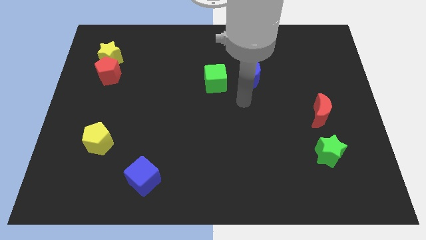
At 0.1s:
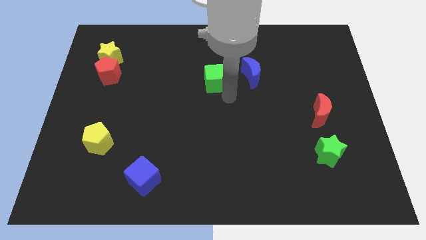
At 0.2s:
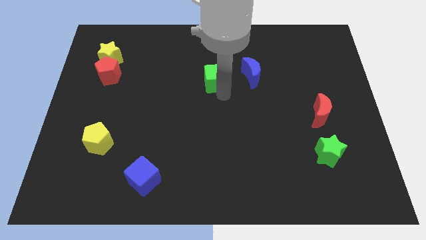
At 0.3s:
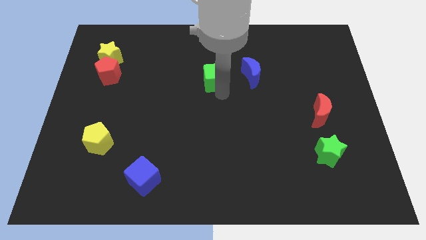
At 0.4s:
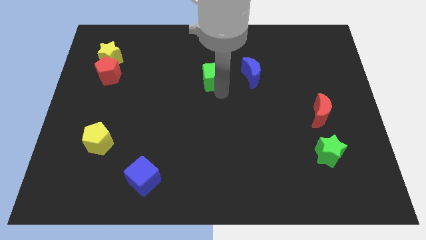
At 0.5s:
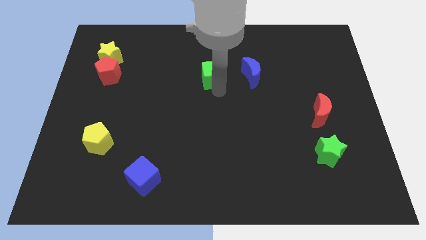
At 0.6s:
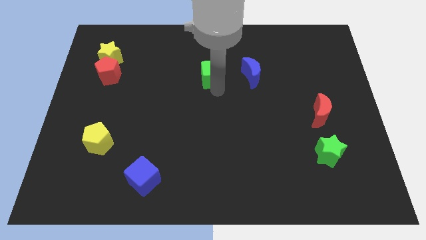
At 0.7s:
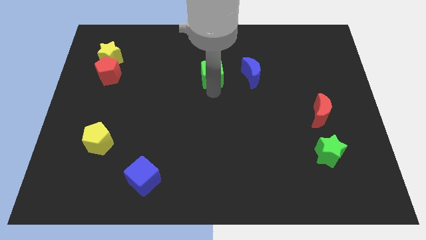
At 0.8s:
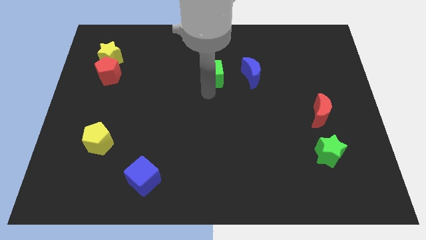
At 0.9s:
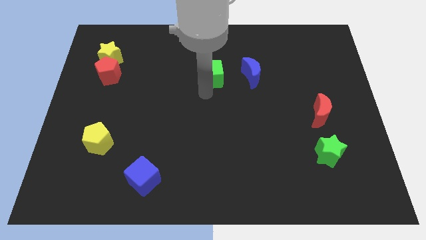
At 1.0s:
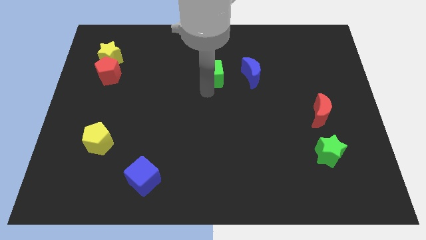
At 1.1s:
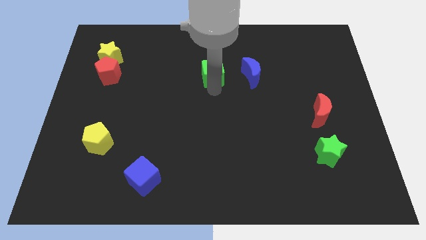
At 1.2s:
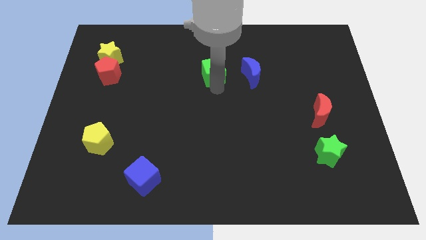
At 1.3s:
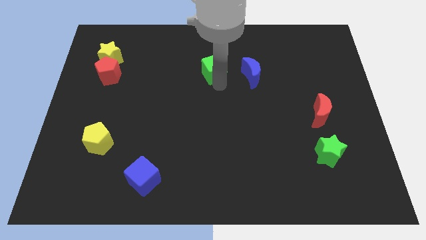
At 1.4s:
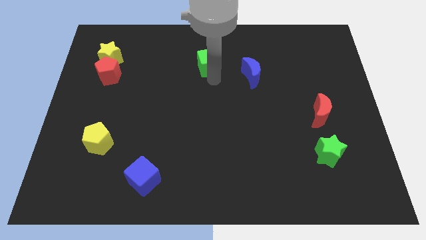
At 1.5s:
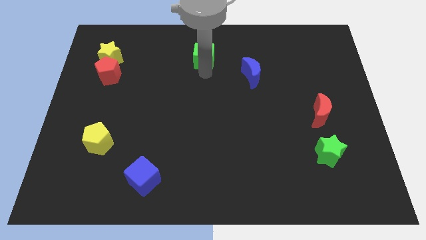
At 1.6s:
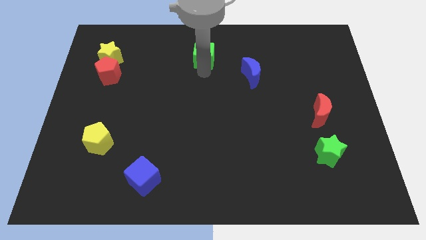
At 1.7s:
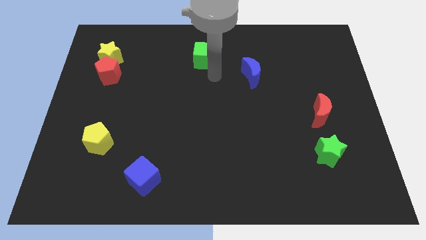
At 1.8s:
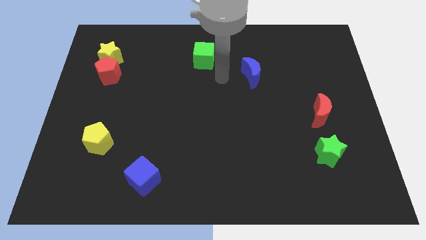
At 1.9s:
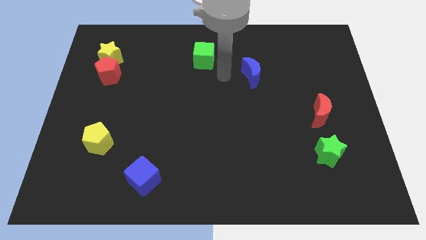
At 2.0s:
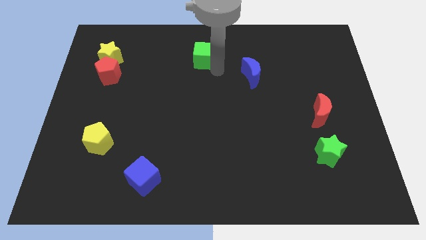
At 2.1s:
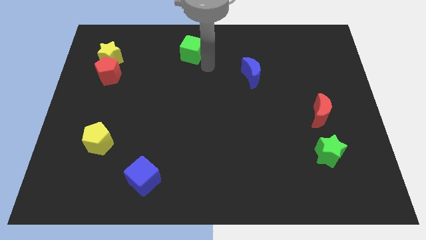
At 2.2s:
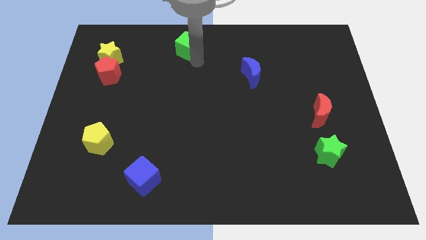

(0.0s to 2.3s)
move green cube diagonally upwards

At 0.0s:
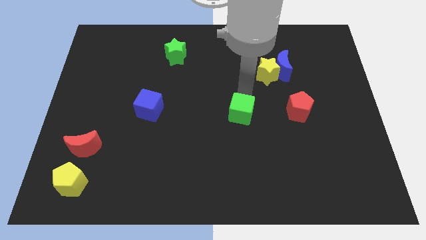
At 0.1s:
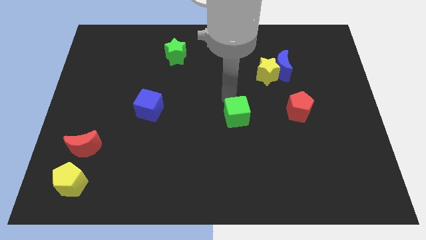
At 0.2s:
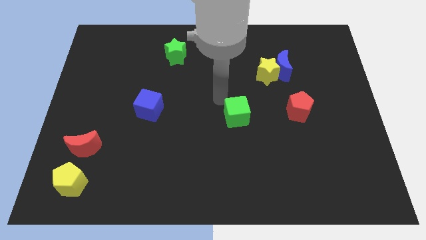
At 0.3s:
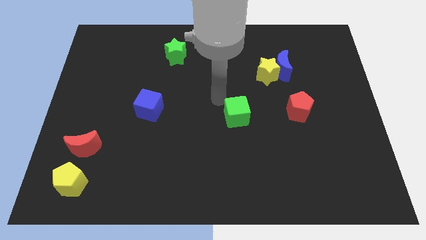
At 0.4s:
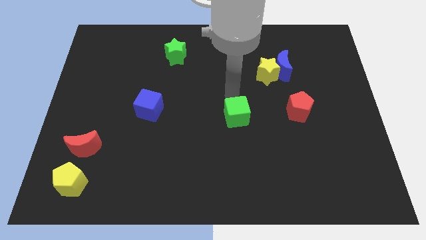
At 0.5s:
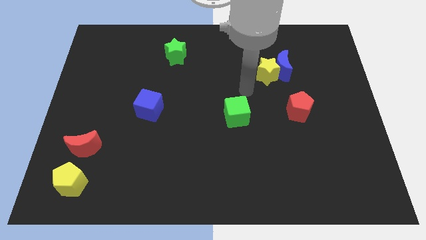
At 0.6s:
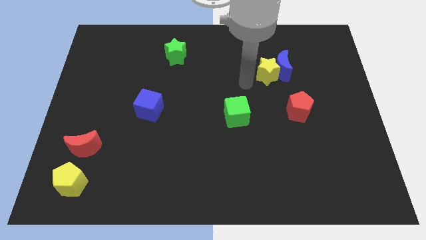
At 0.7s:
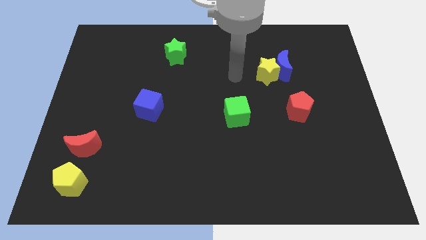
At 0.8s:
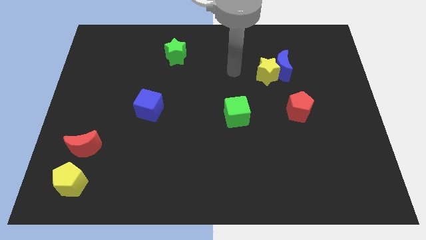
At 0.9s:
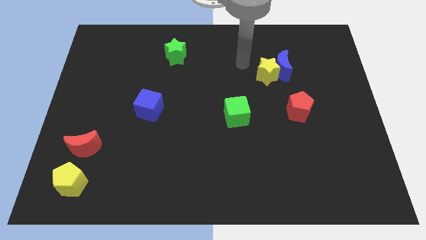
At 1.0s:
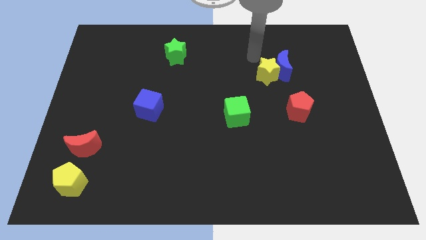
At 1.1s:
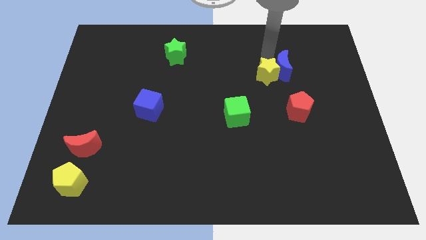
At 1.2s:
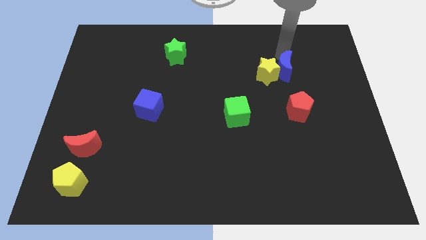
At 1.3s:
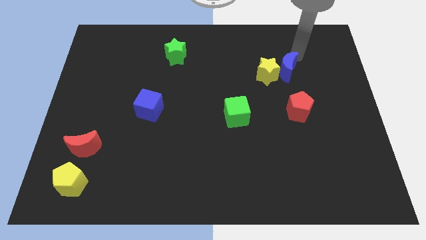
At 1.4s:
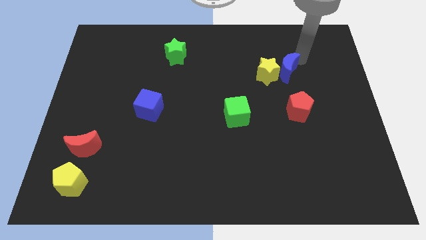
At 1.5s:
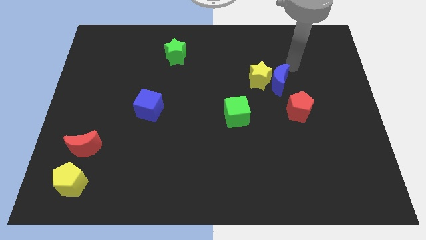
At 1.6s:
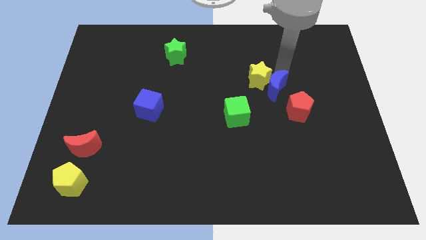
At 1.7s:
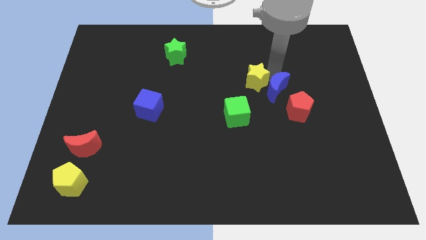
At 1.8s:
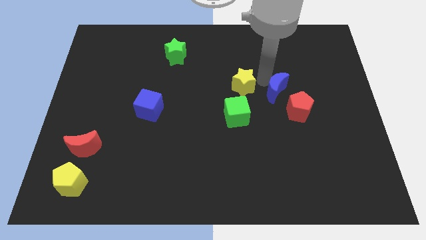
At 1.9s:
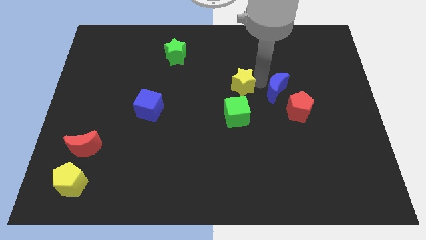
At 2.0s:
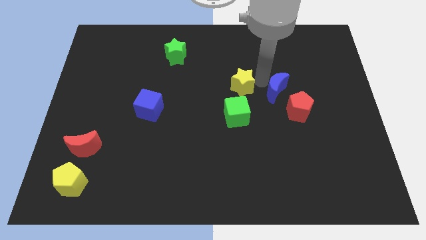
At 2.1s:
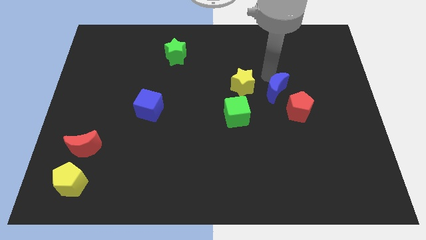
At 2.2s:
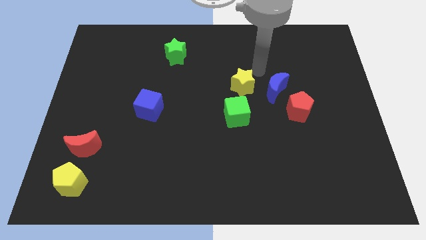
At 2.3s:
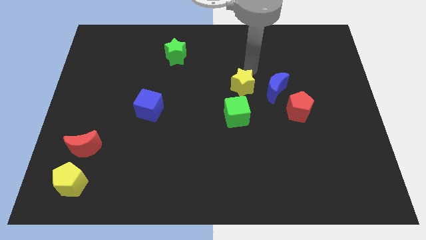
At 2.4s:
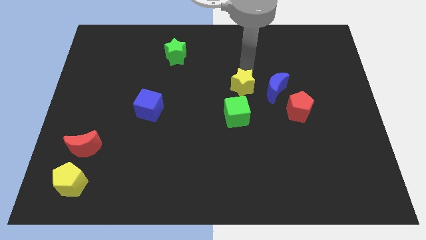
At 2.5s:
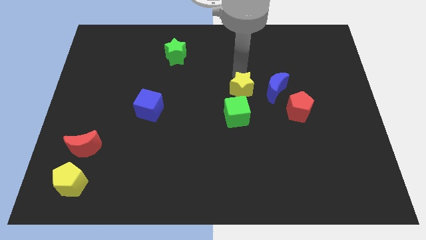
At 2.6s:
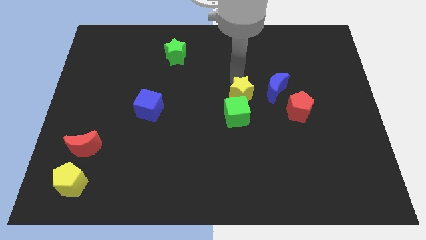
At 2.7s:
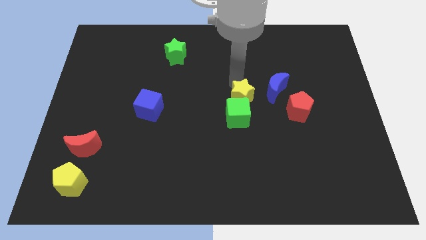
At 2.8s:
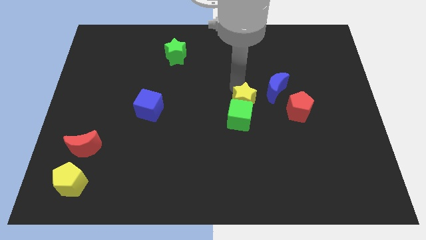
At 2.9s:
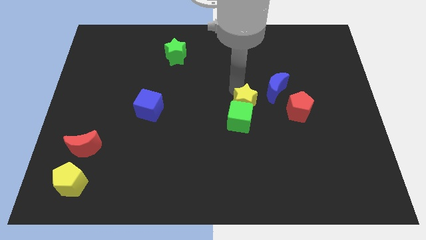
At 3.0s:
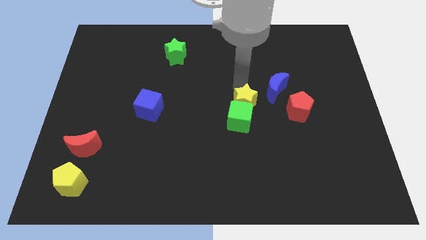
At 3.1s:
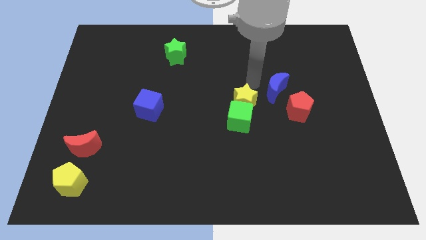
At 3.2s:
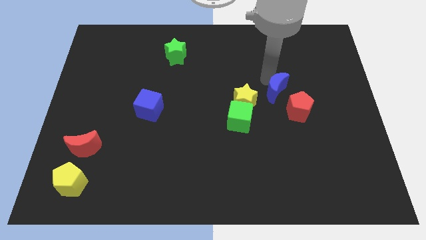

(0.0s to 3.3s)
push the yellow star into green cube

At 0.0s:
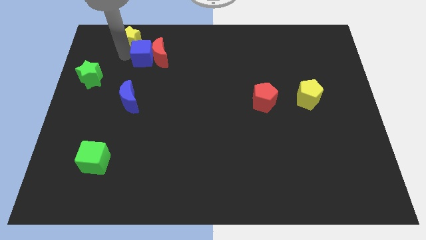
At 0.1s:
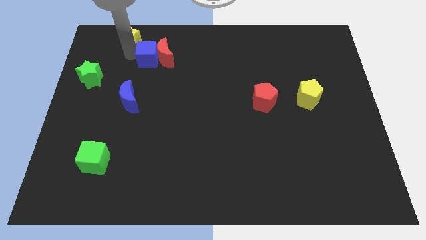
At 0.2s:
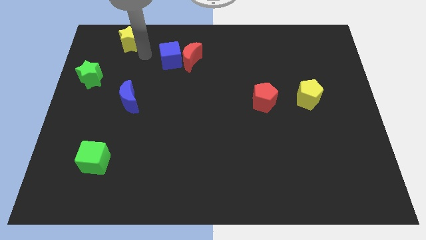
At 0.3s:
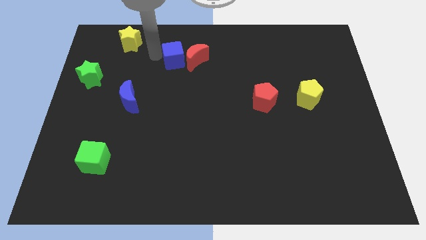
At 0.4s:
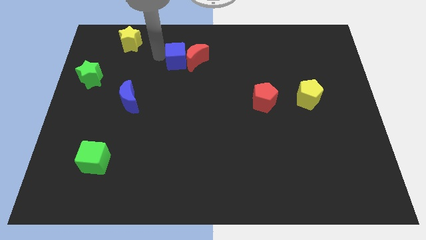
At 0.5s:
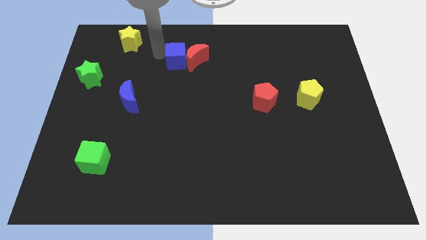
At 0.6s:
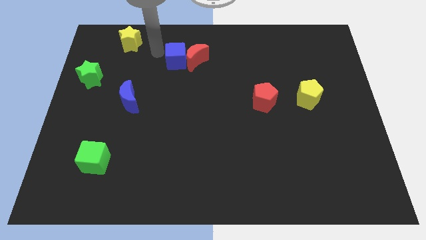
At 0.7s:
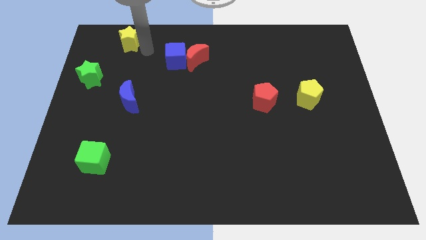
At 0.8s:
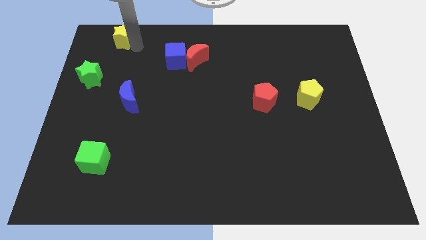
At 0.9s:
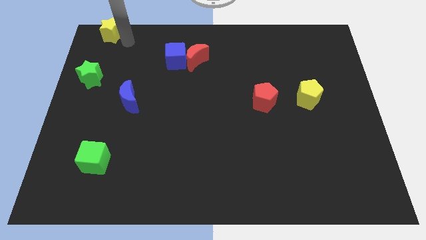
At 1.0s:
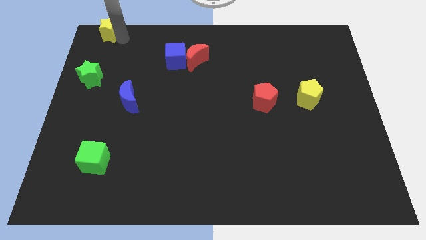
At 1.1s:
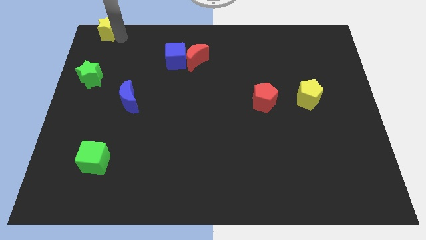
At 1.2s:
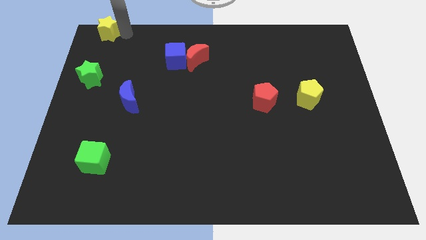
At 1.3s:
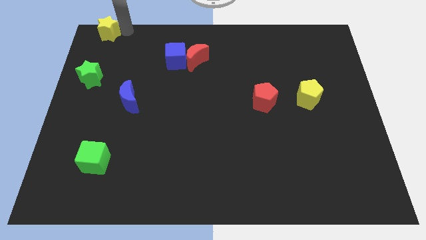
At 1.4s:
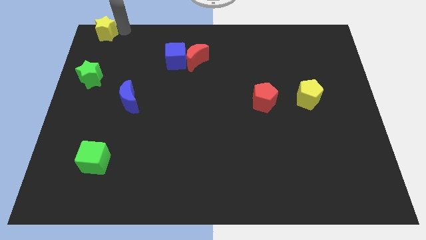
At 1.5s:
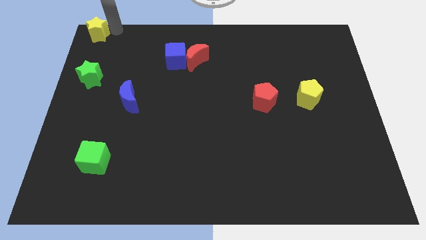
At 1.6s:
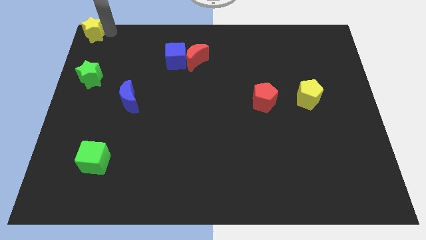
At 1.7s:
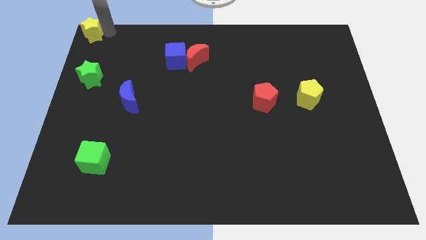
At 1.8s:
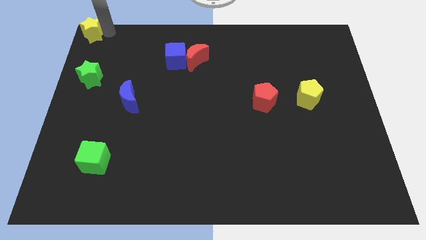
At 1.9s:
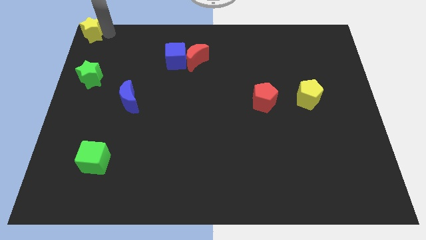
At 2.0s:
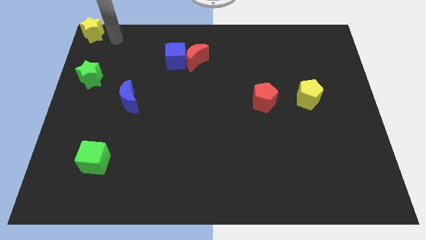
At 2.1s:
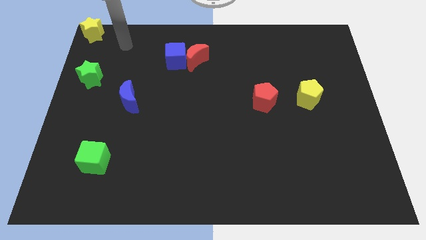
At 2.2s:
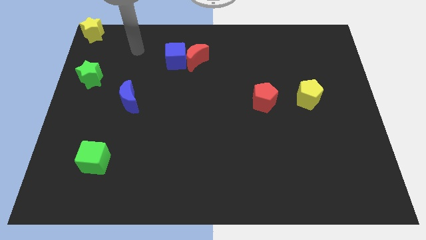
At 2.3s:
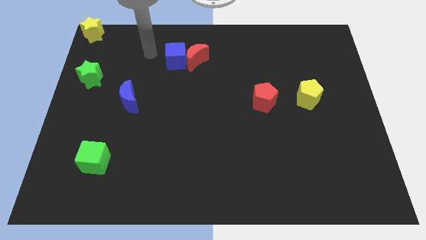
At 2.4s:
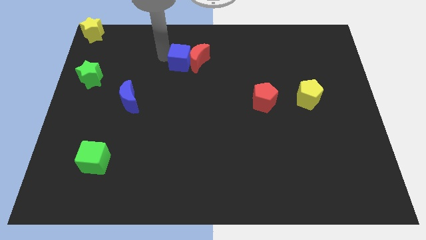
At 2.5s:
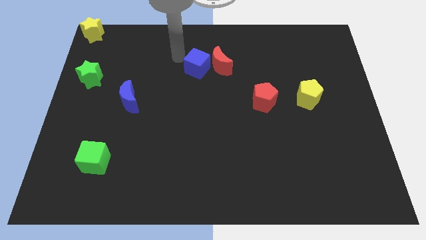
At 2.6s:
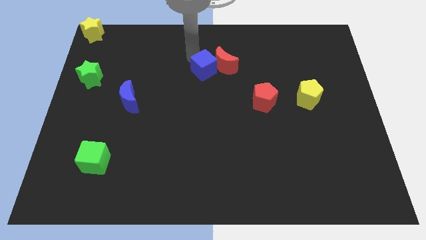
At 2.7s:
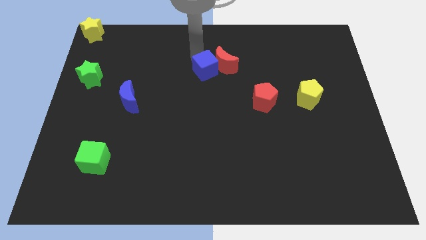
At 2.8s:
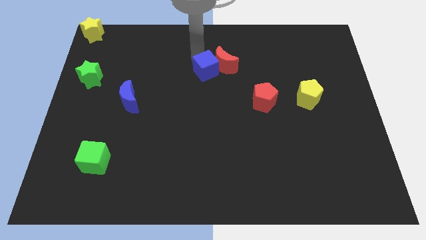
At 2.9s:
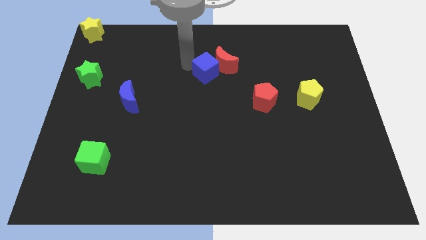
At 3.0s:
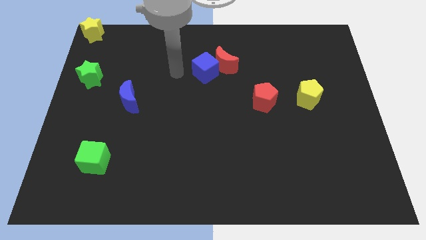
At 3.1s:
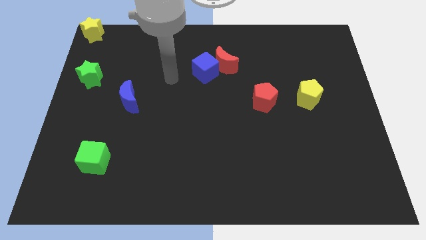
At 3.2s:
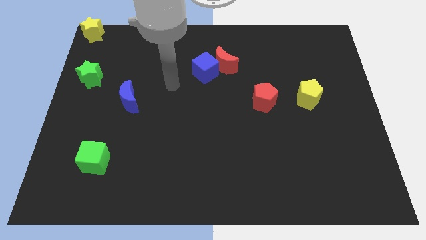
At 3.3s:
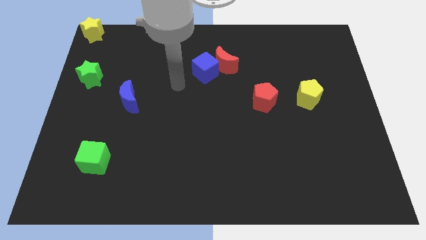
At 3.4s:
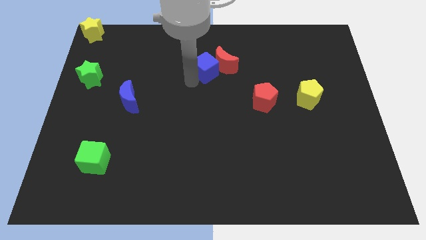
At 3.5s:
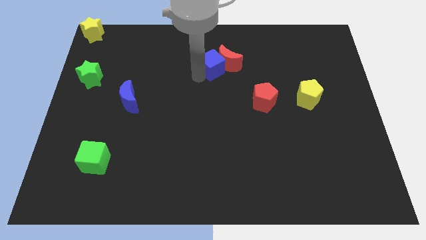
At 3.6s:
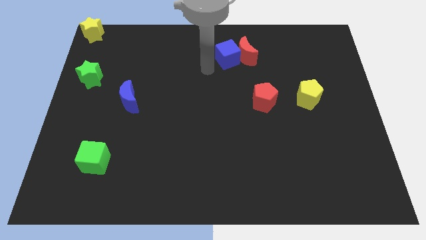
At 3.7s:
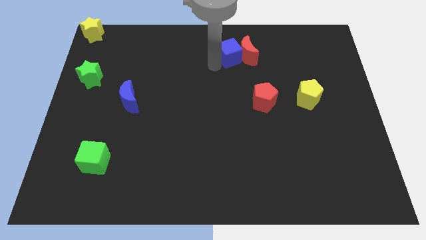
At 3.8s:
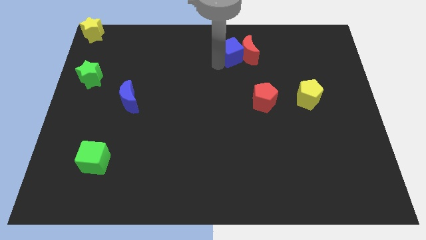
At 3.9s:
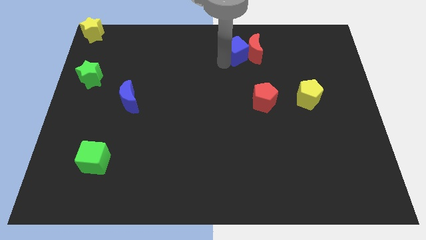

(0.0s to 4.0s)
move the yellow star to top right corner of the board
